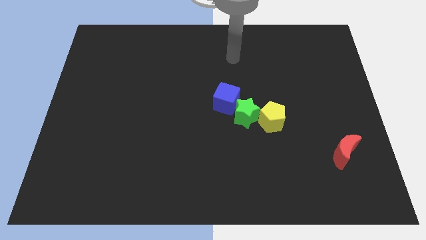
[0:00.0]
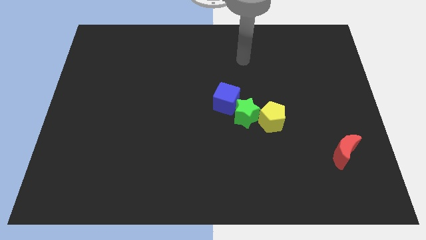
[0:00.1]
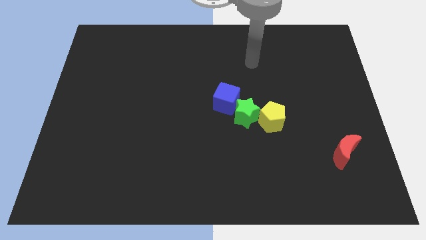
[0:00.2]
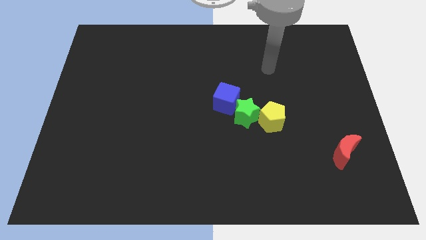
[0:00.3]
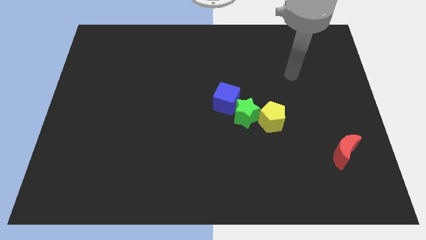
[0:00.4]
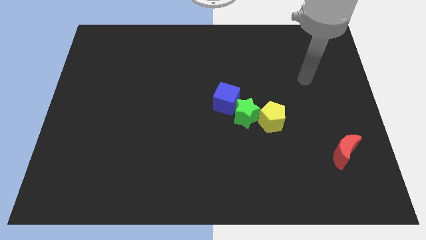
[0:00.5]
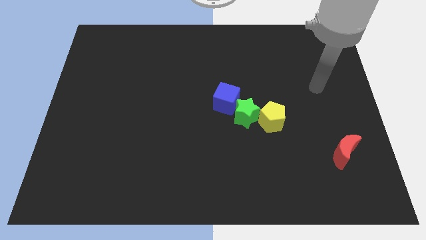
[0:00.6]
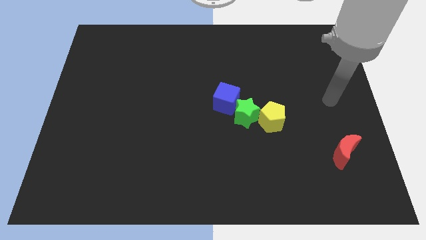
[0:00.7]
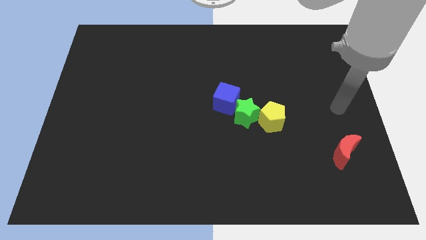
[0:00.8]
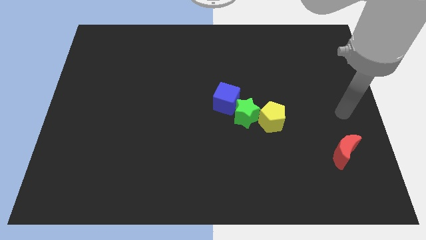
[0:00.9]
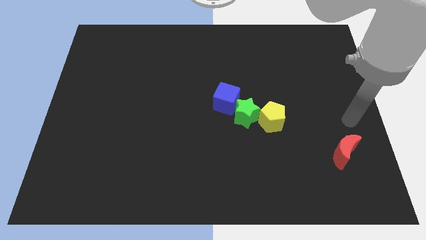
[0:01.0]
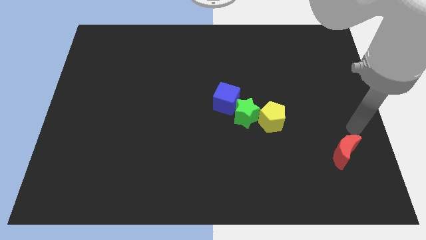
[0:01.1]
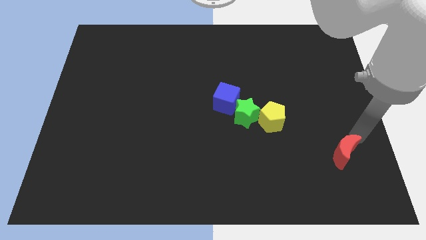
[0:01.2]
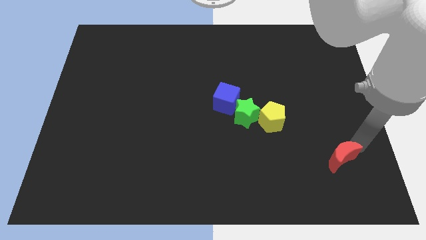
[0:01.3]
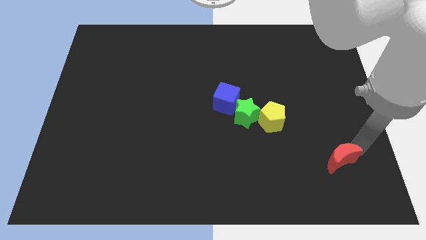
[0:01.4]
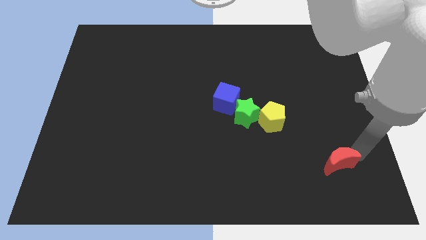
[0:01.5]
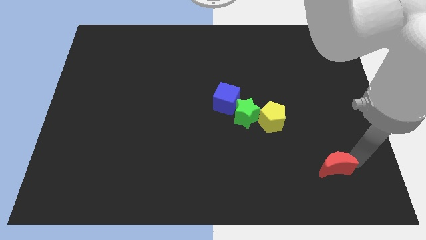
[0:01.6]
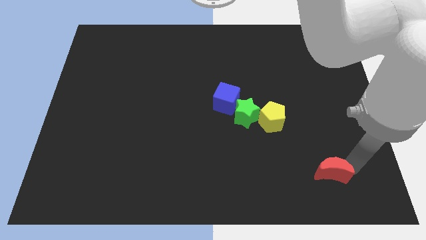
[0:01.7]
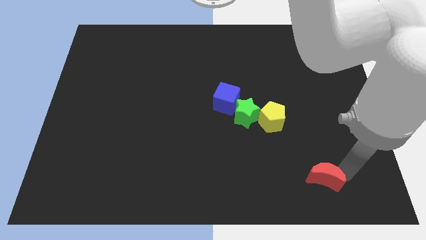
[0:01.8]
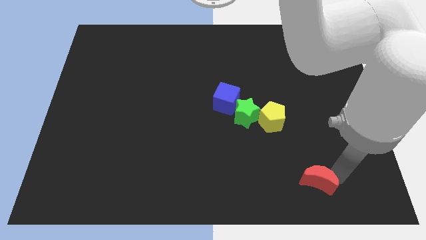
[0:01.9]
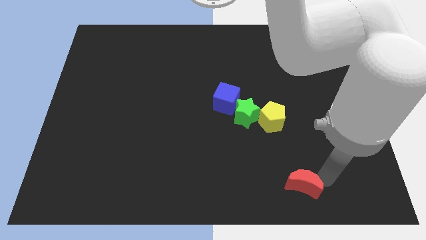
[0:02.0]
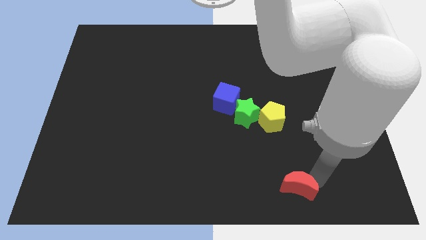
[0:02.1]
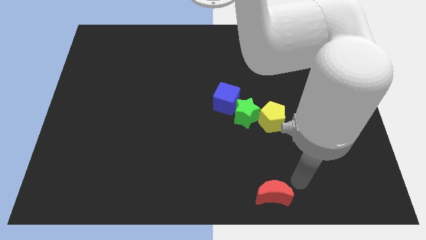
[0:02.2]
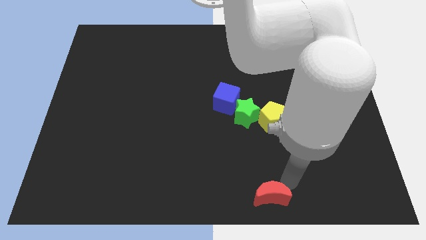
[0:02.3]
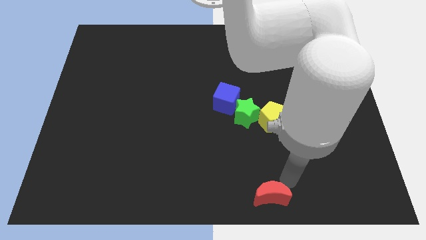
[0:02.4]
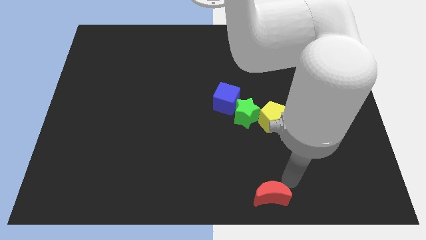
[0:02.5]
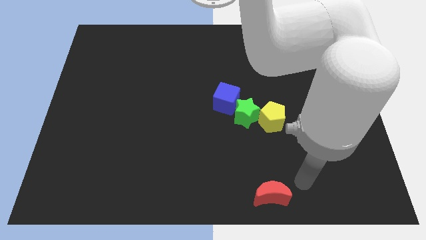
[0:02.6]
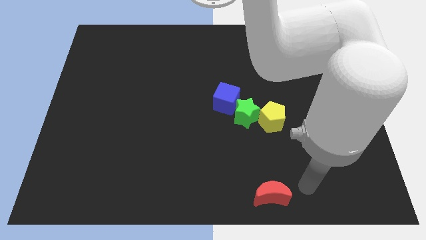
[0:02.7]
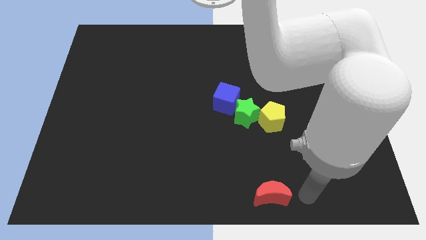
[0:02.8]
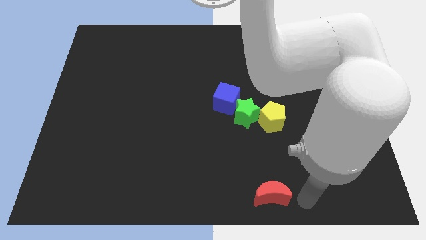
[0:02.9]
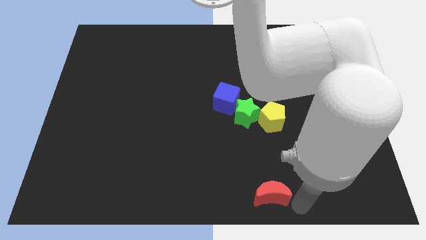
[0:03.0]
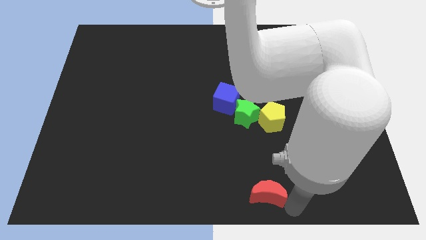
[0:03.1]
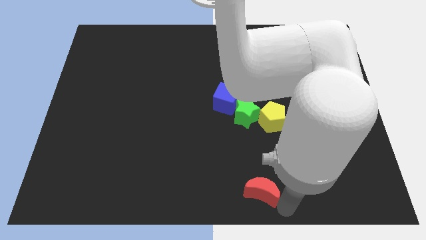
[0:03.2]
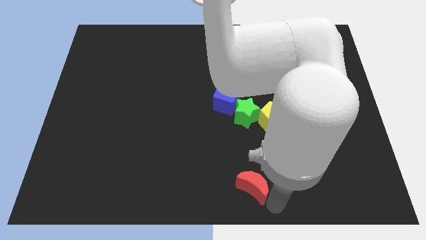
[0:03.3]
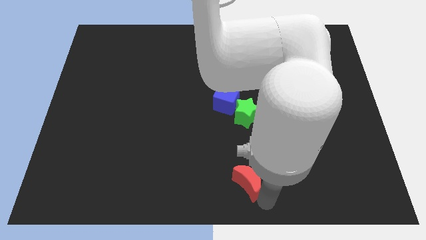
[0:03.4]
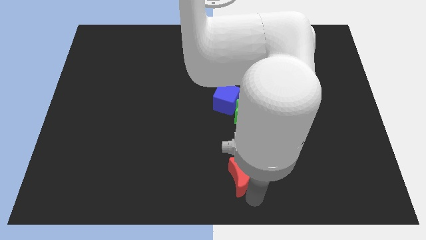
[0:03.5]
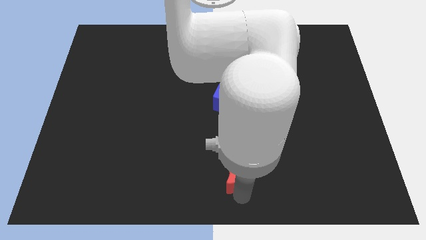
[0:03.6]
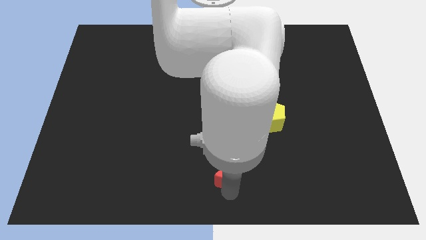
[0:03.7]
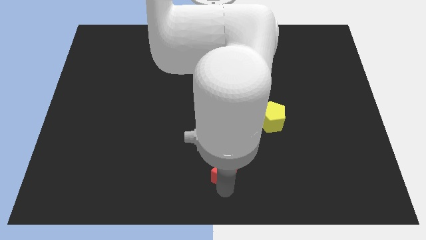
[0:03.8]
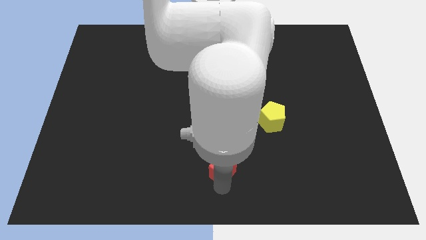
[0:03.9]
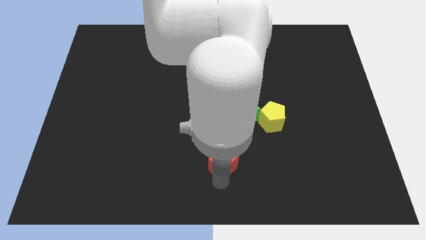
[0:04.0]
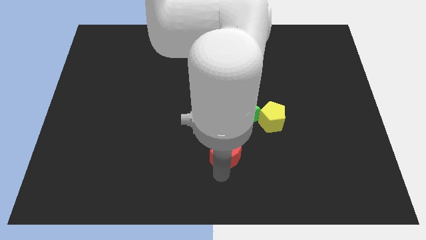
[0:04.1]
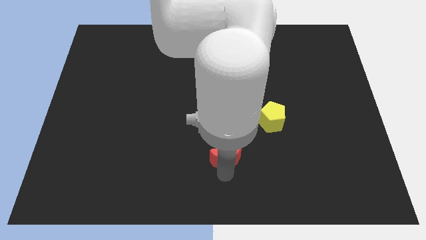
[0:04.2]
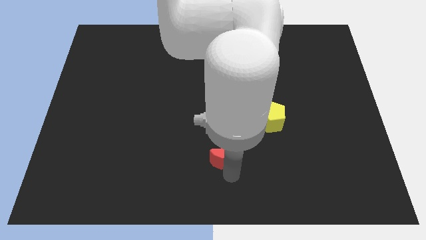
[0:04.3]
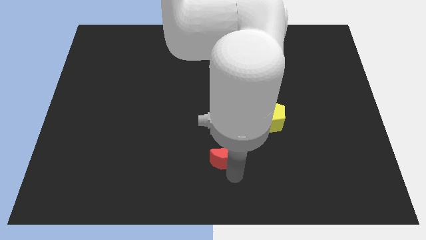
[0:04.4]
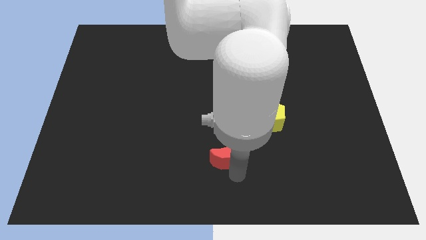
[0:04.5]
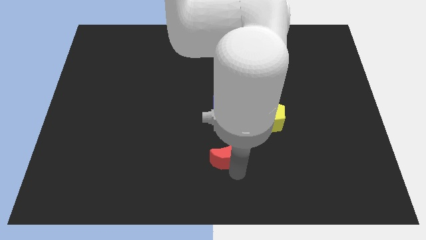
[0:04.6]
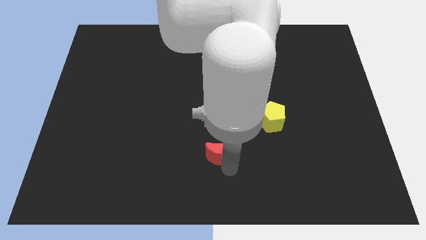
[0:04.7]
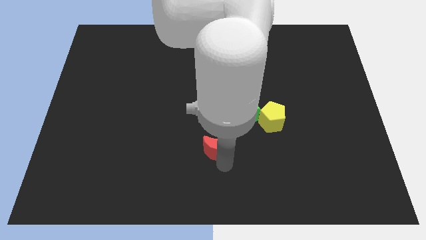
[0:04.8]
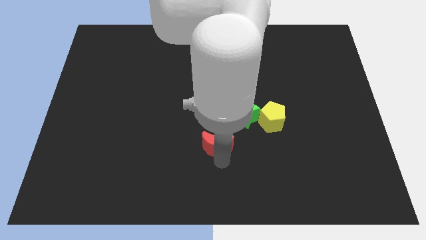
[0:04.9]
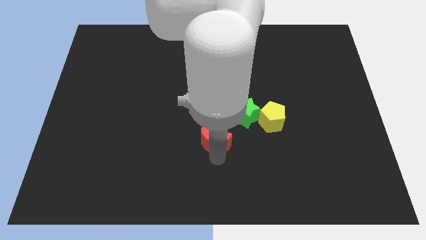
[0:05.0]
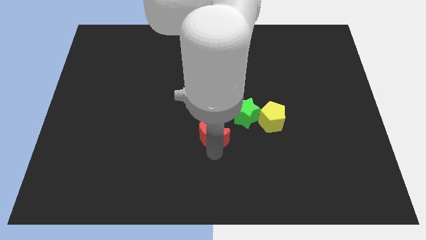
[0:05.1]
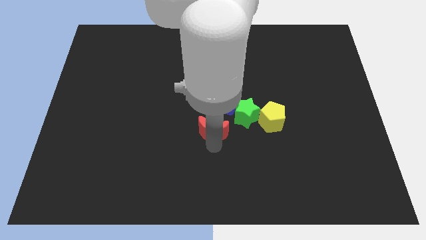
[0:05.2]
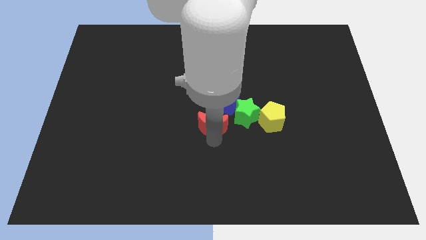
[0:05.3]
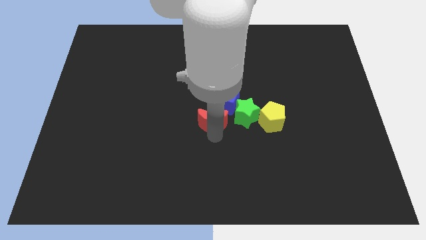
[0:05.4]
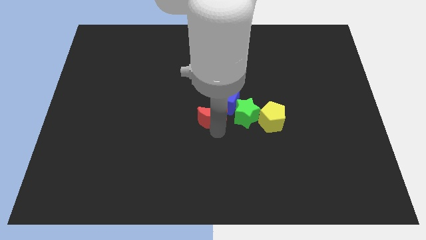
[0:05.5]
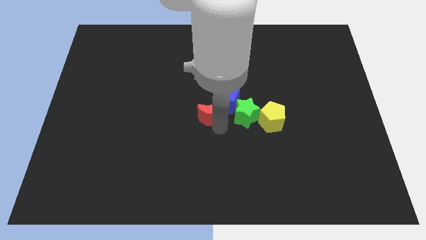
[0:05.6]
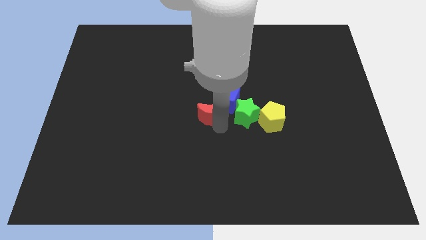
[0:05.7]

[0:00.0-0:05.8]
push the moon towards the blue block

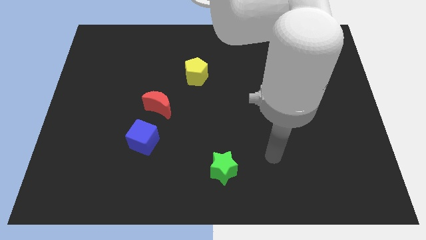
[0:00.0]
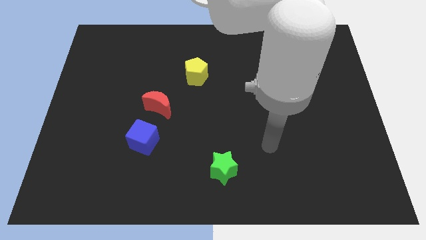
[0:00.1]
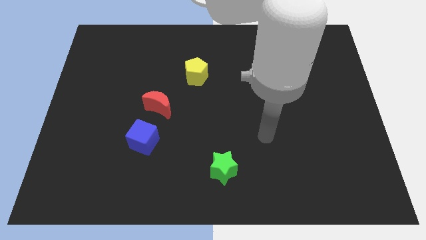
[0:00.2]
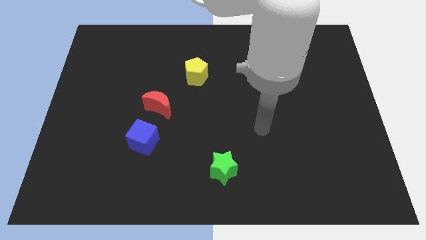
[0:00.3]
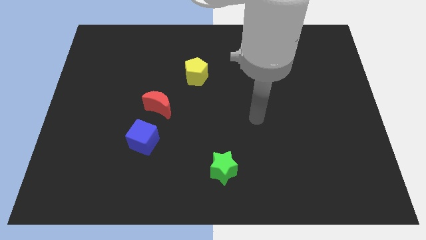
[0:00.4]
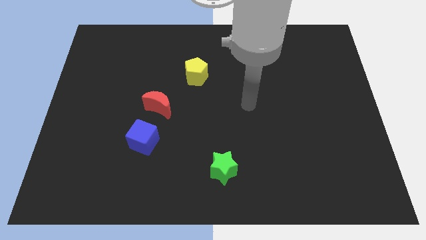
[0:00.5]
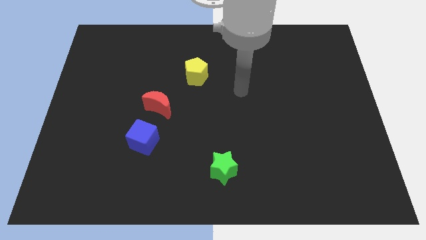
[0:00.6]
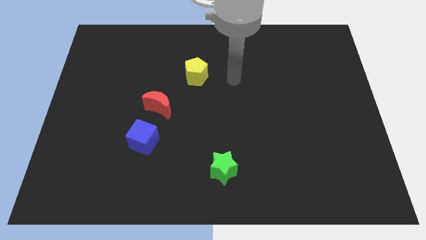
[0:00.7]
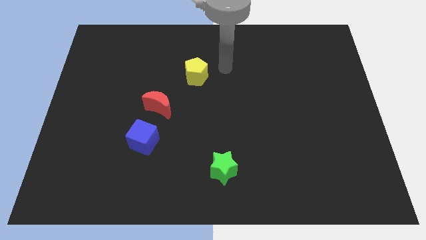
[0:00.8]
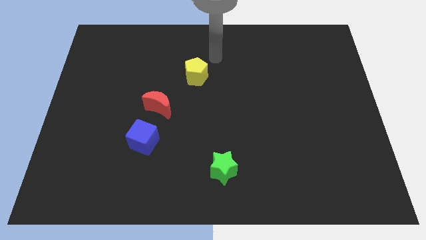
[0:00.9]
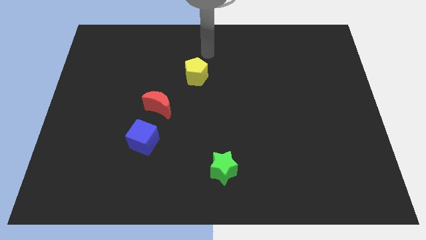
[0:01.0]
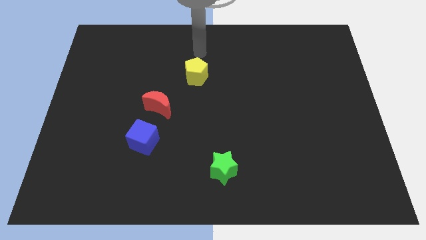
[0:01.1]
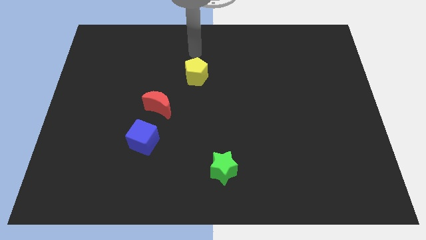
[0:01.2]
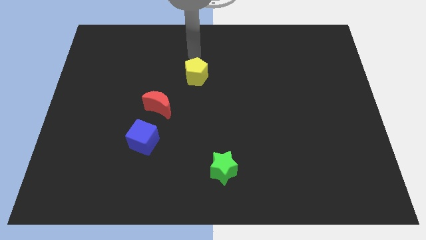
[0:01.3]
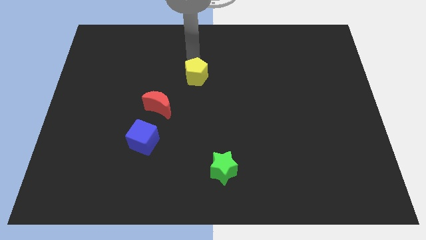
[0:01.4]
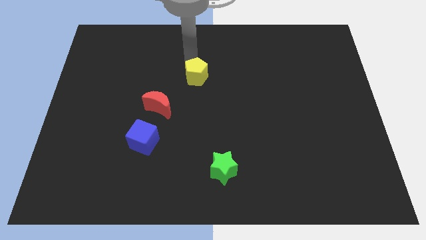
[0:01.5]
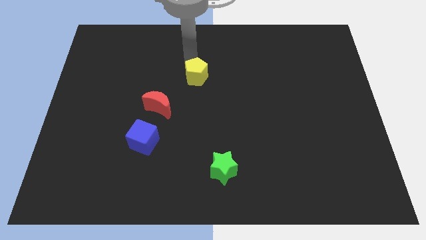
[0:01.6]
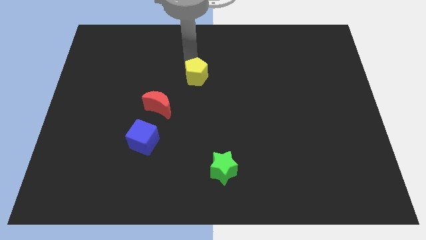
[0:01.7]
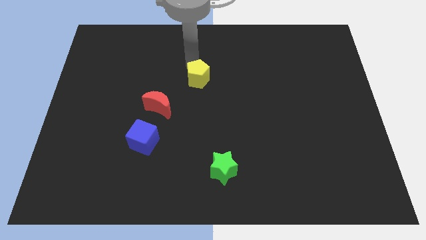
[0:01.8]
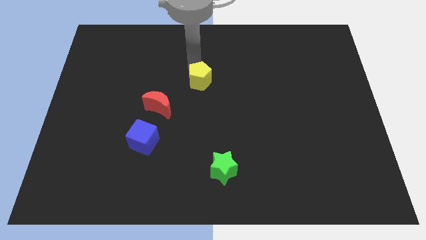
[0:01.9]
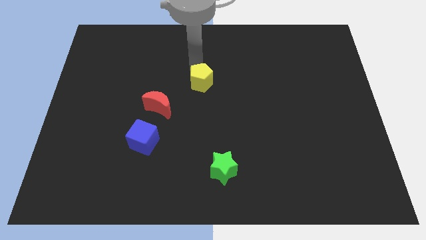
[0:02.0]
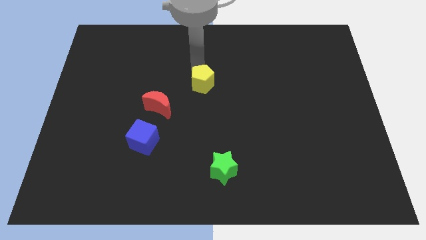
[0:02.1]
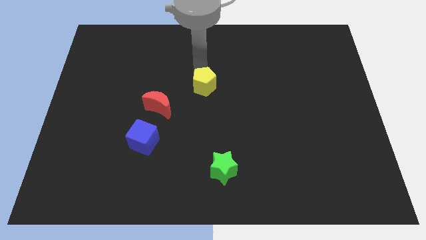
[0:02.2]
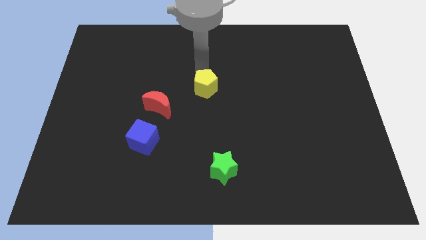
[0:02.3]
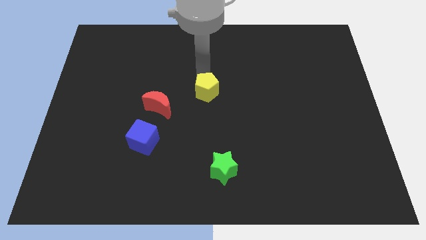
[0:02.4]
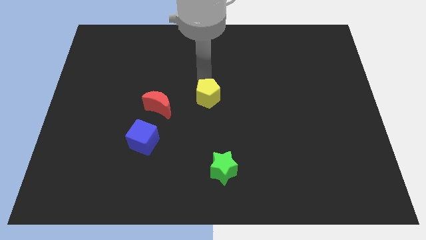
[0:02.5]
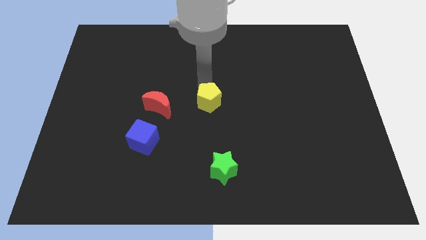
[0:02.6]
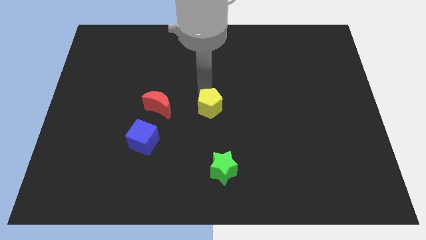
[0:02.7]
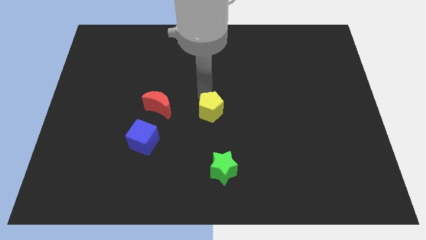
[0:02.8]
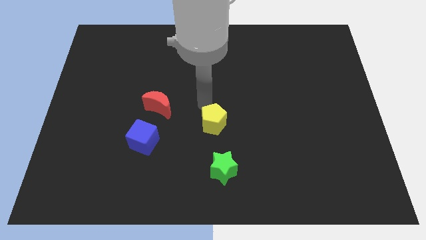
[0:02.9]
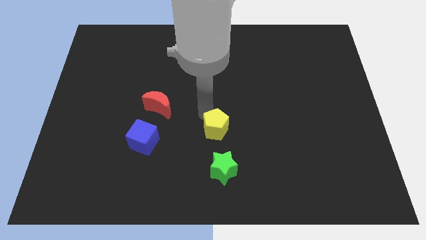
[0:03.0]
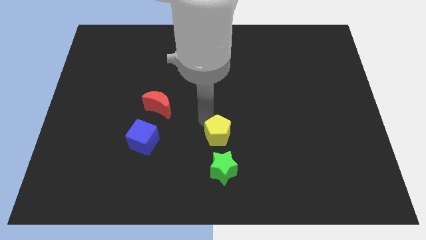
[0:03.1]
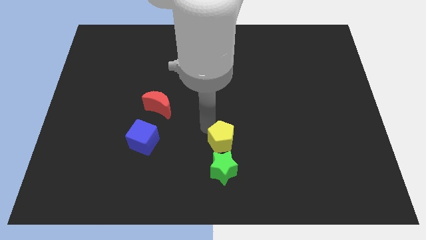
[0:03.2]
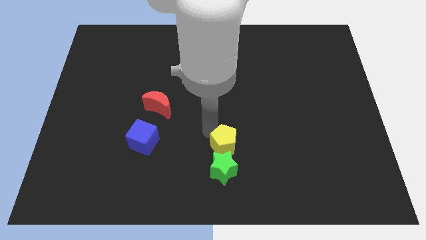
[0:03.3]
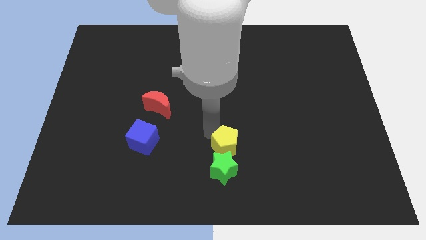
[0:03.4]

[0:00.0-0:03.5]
move the pentagon towards the green star
